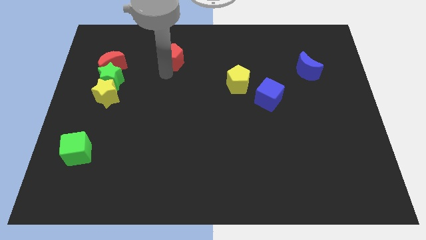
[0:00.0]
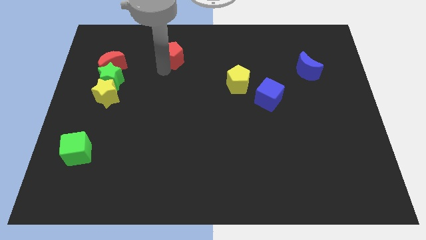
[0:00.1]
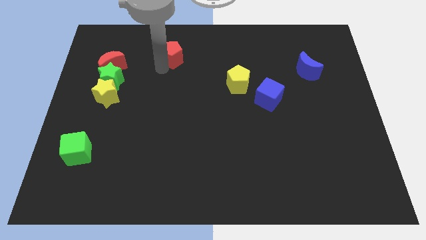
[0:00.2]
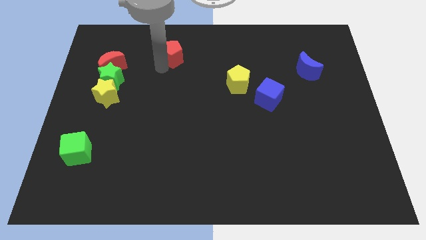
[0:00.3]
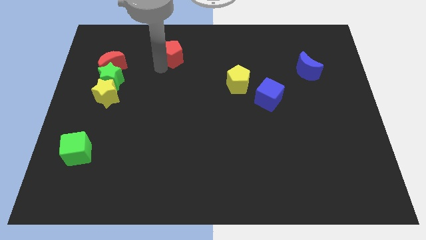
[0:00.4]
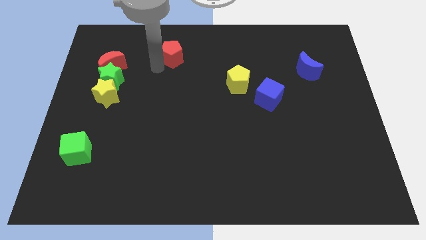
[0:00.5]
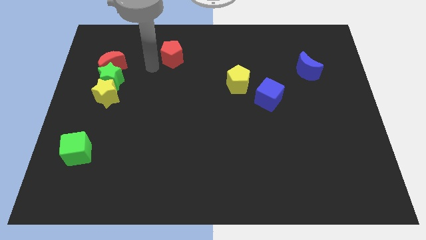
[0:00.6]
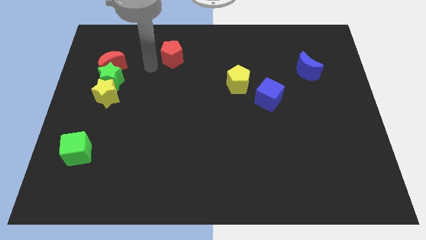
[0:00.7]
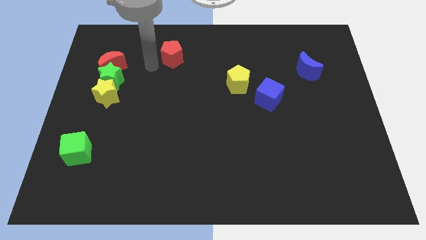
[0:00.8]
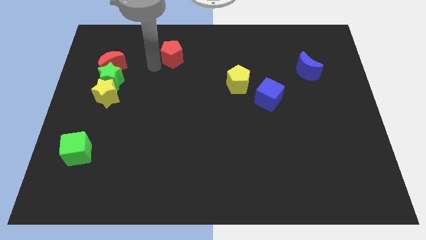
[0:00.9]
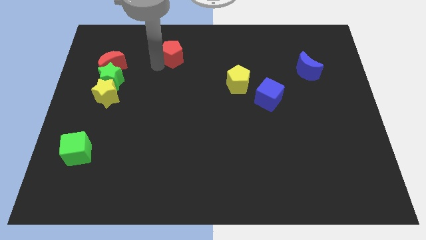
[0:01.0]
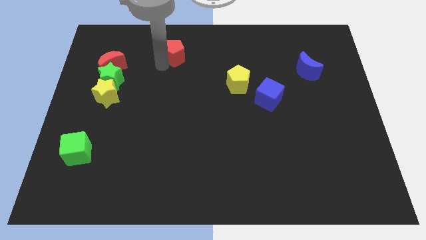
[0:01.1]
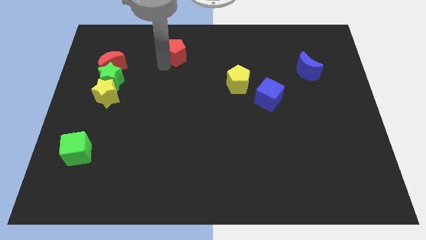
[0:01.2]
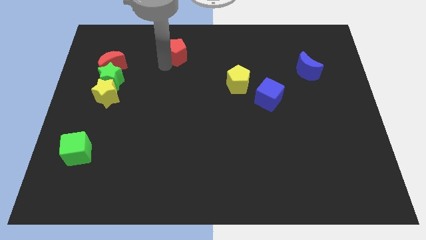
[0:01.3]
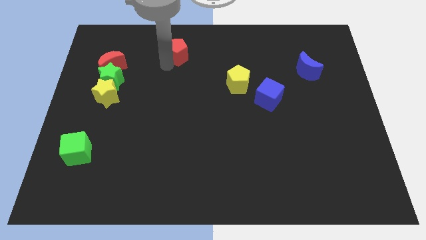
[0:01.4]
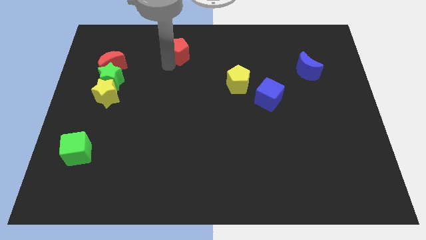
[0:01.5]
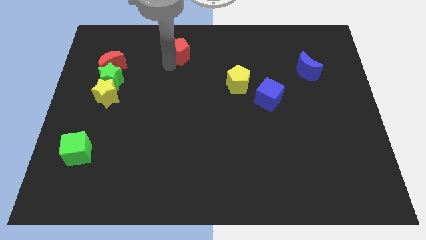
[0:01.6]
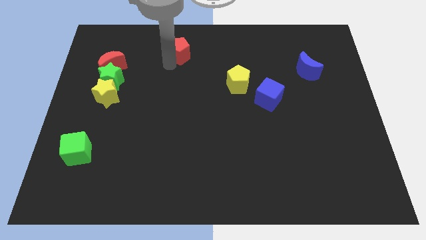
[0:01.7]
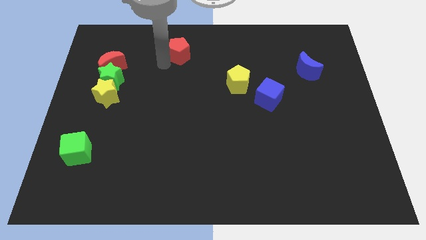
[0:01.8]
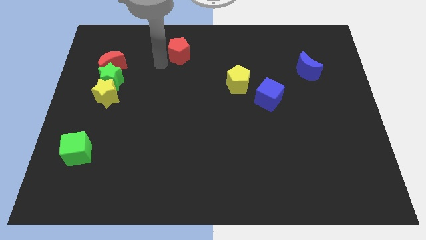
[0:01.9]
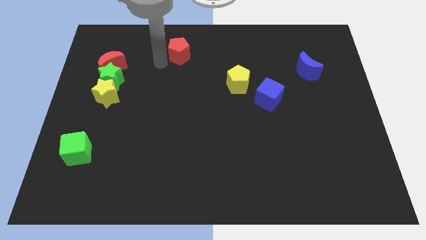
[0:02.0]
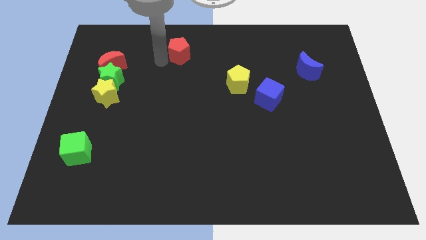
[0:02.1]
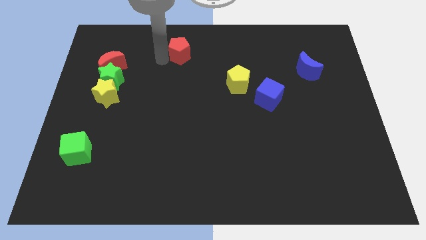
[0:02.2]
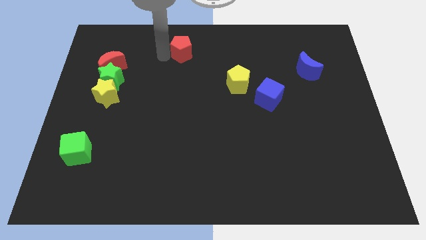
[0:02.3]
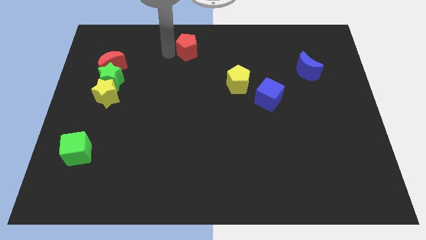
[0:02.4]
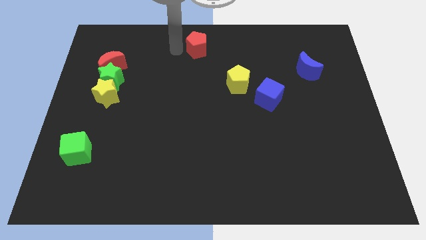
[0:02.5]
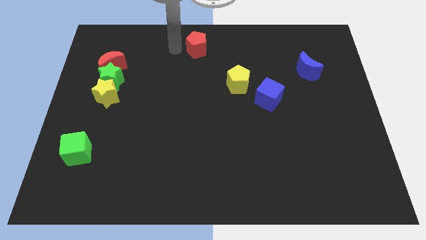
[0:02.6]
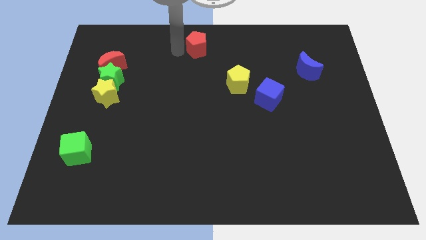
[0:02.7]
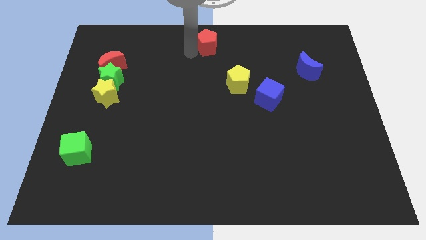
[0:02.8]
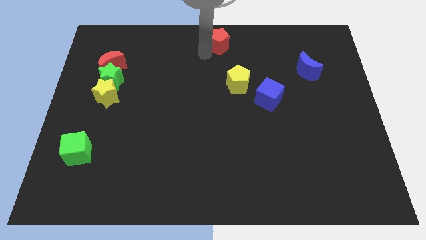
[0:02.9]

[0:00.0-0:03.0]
push red pentagon to center top

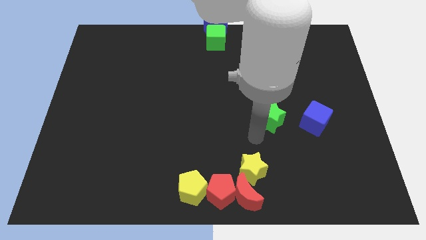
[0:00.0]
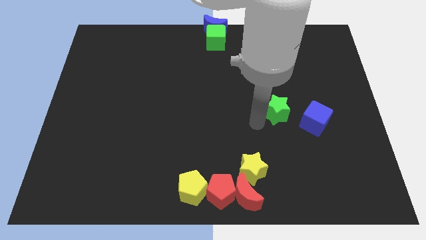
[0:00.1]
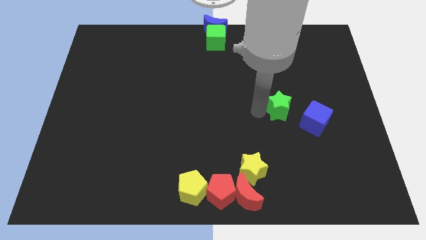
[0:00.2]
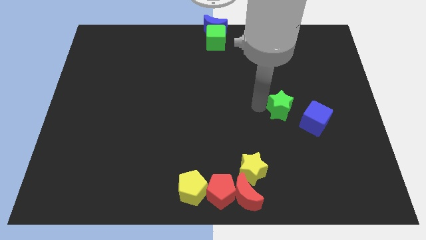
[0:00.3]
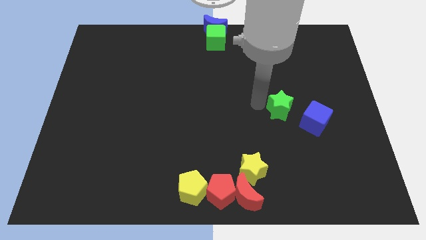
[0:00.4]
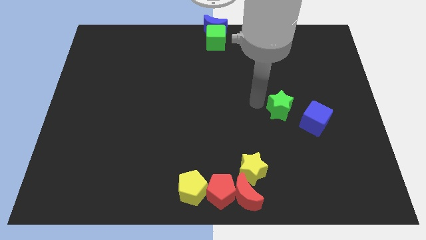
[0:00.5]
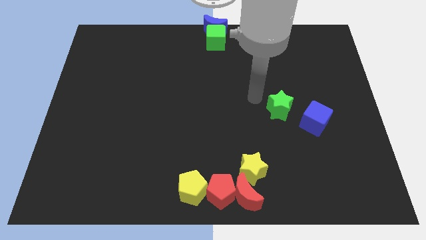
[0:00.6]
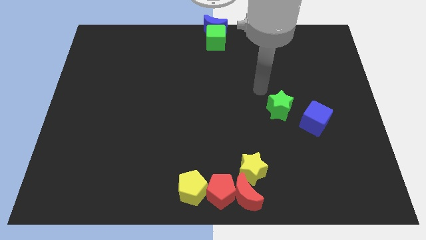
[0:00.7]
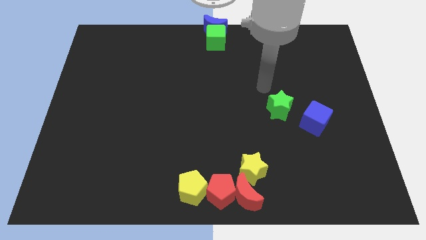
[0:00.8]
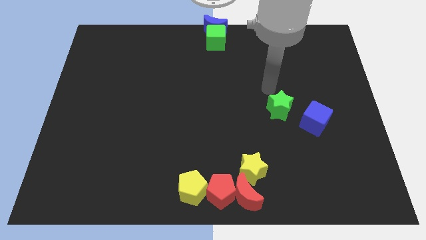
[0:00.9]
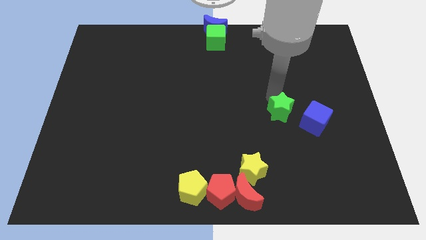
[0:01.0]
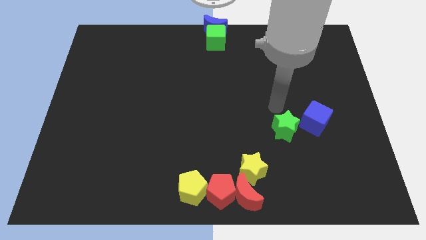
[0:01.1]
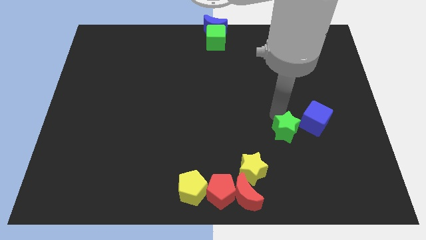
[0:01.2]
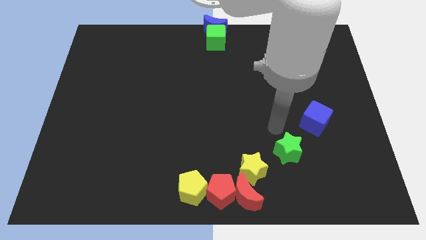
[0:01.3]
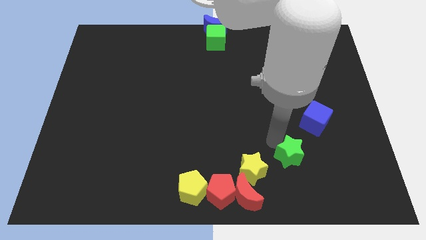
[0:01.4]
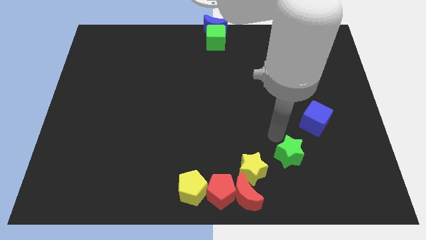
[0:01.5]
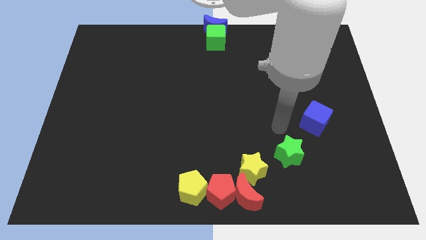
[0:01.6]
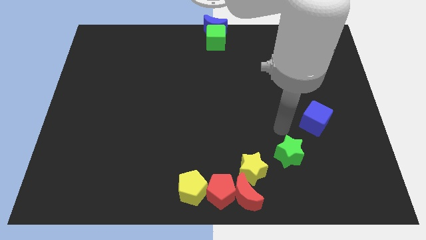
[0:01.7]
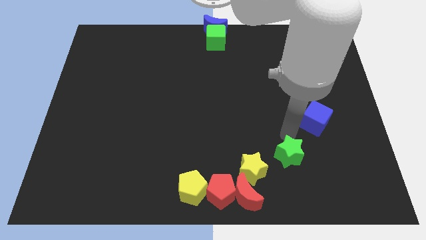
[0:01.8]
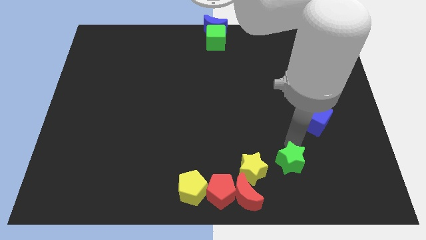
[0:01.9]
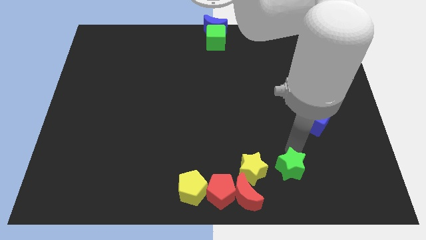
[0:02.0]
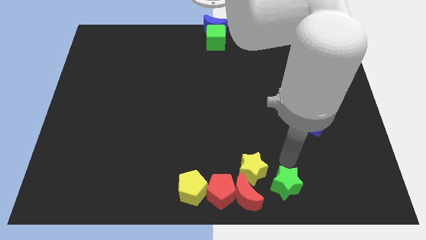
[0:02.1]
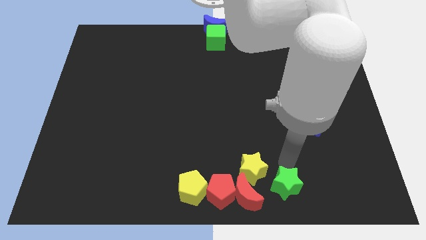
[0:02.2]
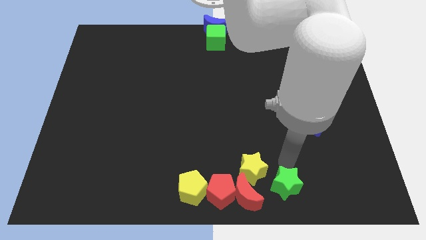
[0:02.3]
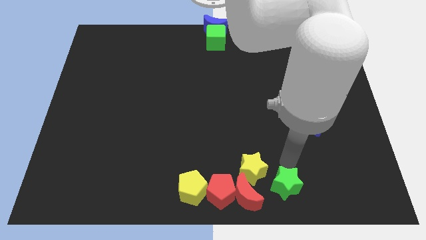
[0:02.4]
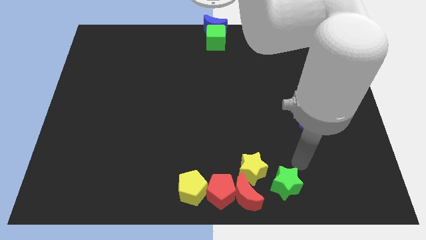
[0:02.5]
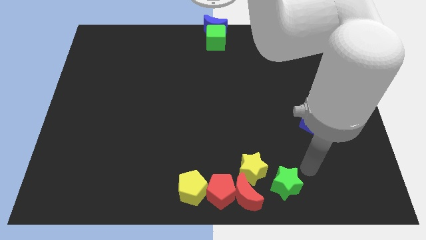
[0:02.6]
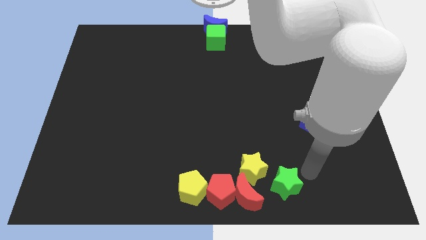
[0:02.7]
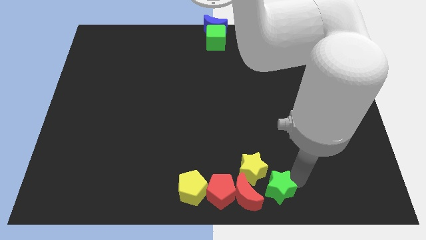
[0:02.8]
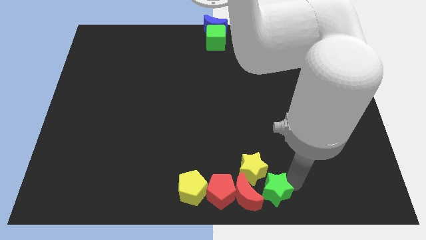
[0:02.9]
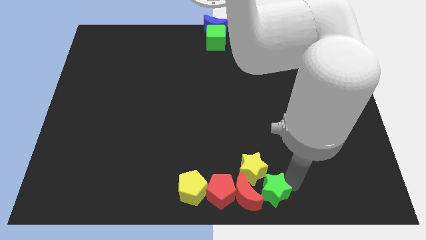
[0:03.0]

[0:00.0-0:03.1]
slide green star into red moon

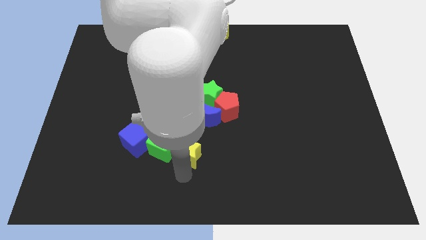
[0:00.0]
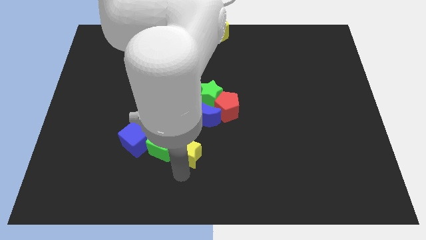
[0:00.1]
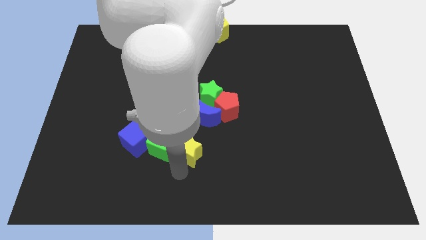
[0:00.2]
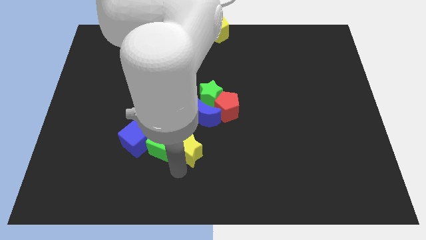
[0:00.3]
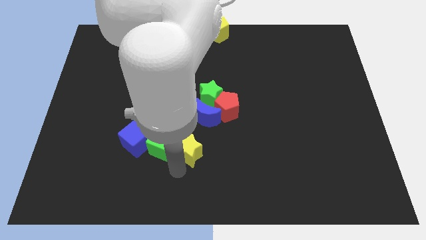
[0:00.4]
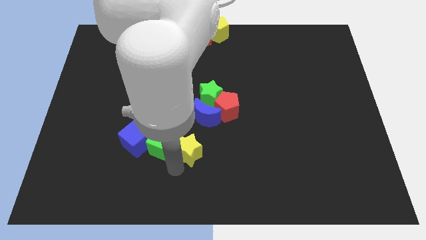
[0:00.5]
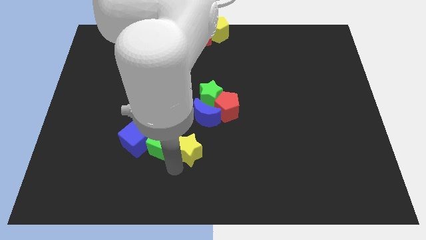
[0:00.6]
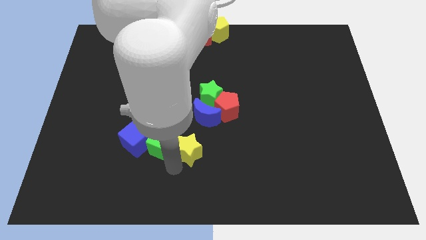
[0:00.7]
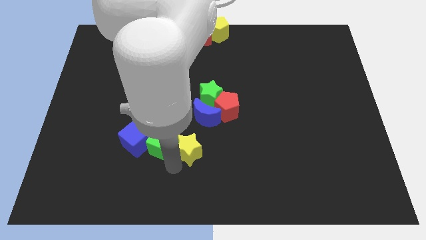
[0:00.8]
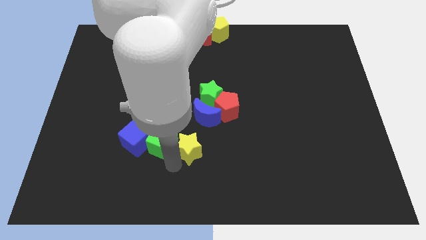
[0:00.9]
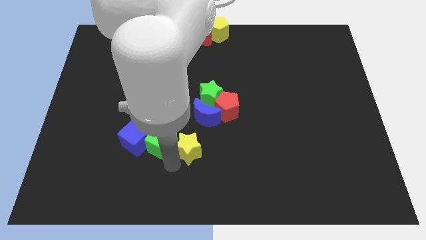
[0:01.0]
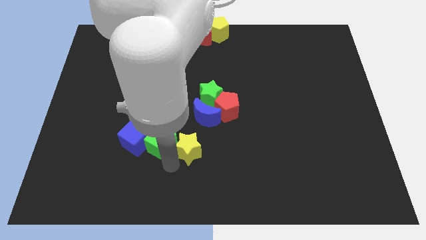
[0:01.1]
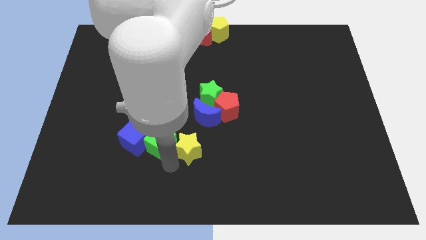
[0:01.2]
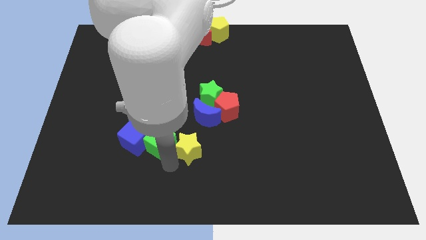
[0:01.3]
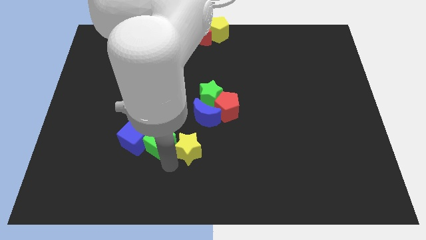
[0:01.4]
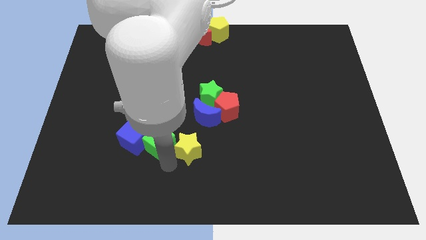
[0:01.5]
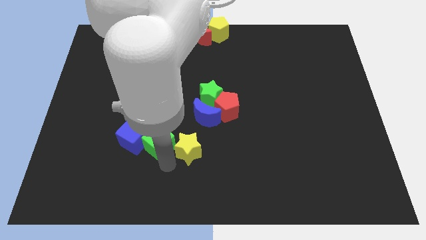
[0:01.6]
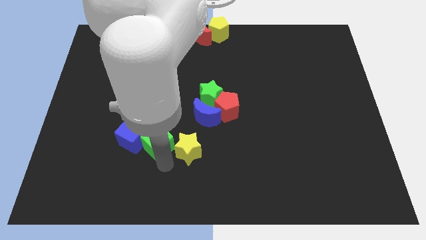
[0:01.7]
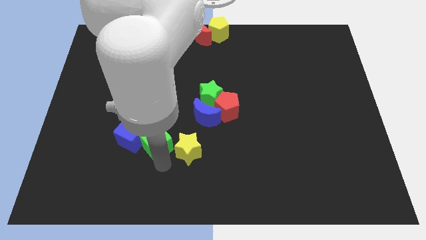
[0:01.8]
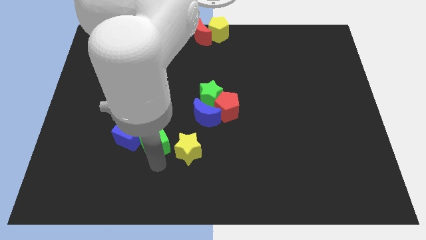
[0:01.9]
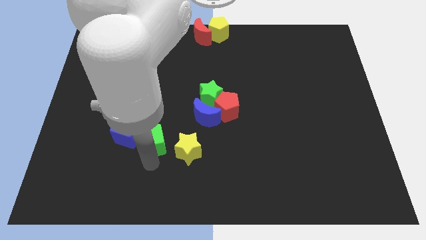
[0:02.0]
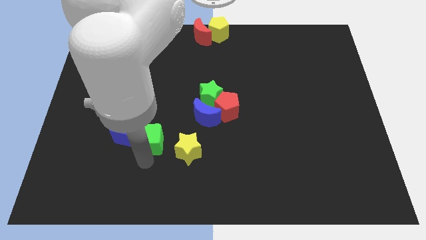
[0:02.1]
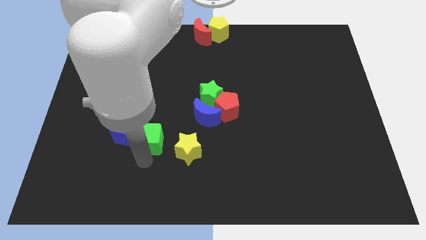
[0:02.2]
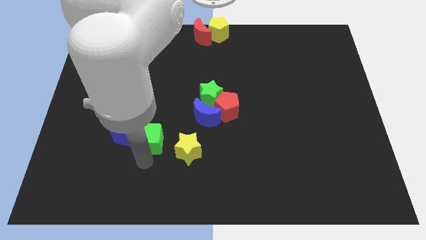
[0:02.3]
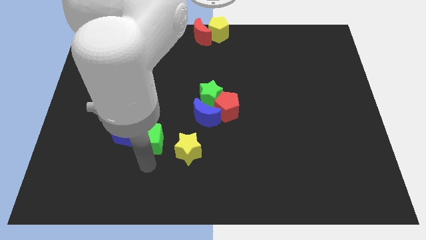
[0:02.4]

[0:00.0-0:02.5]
separate green cube from yellow star

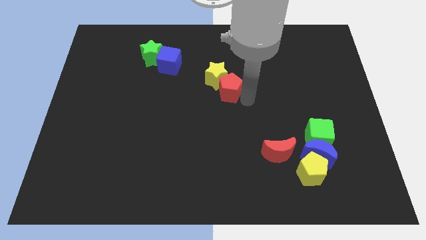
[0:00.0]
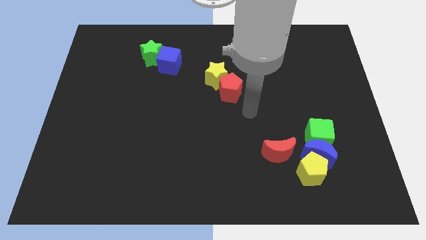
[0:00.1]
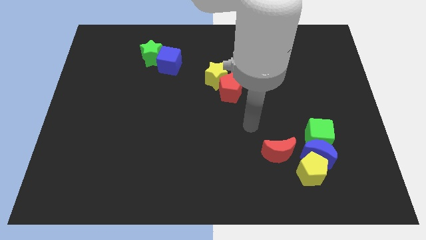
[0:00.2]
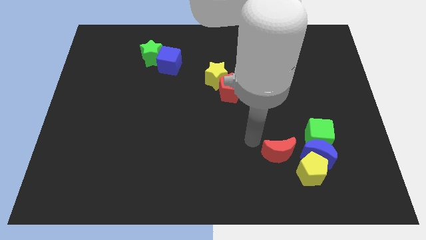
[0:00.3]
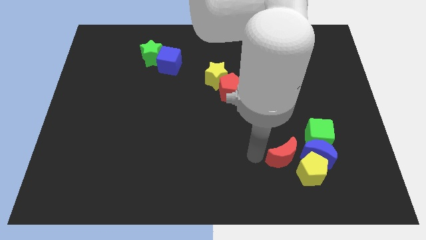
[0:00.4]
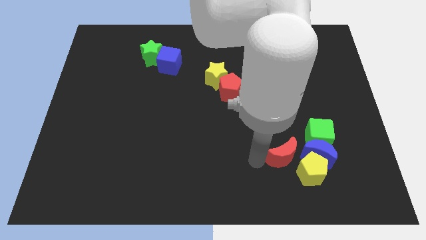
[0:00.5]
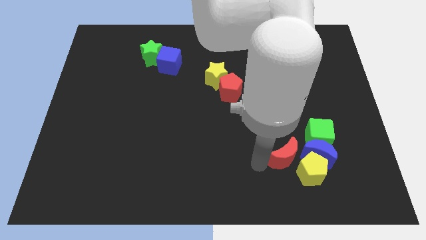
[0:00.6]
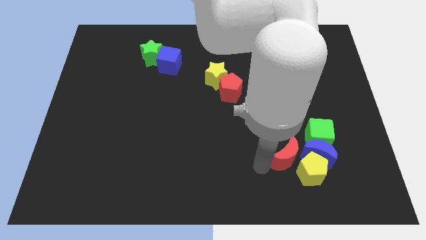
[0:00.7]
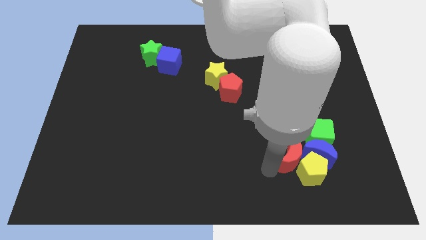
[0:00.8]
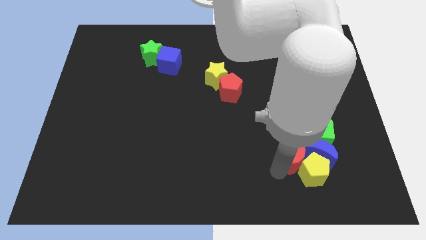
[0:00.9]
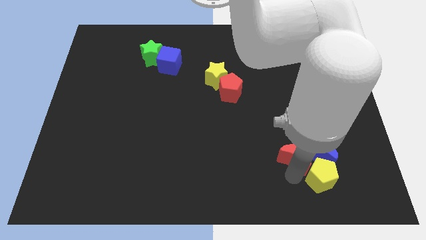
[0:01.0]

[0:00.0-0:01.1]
push the red crescent into the yellow pentagon
